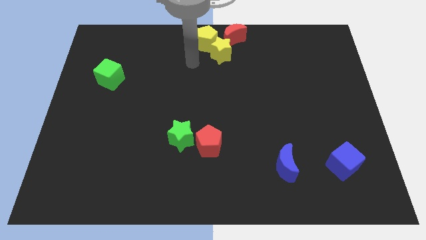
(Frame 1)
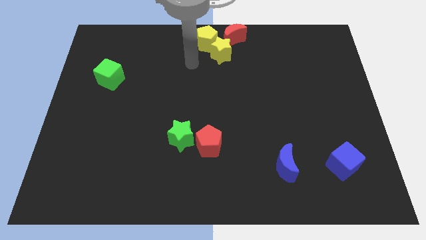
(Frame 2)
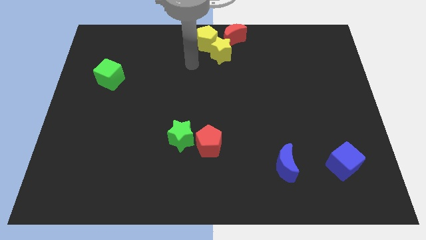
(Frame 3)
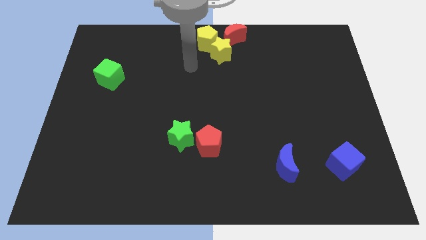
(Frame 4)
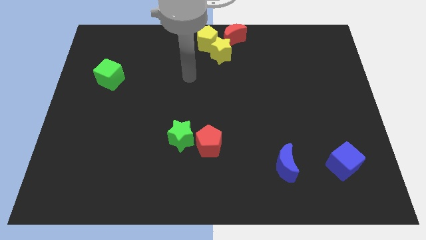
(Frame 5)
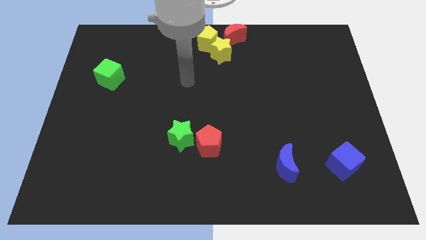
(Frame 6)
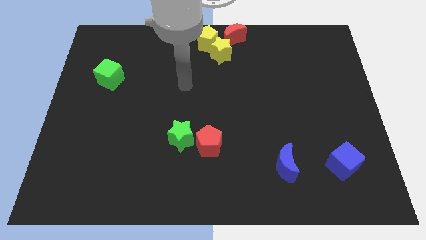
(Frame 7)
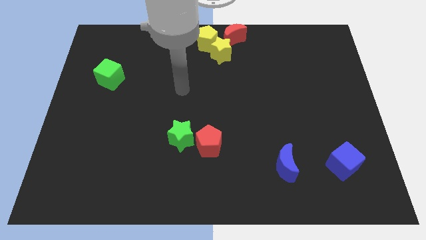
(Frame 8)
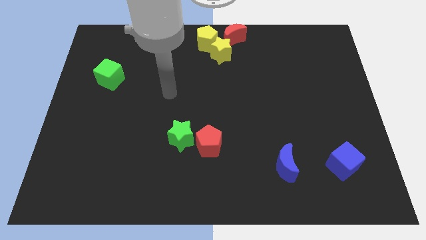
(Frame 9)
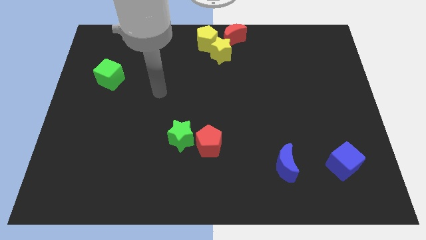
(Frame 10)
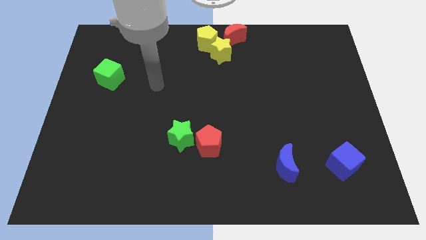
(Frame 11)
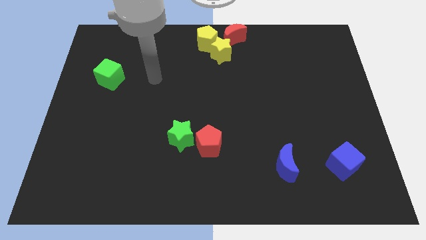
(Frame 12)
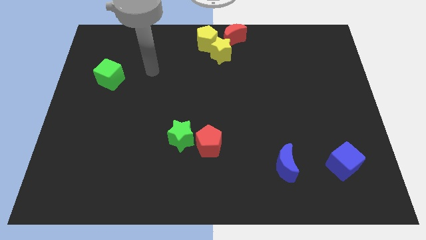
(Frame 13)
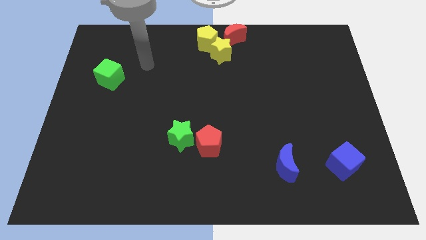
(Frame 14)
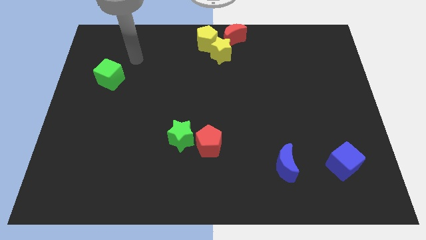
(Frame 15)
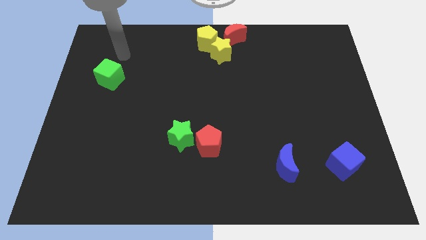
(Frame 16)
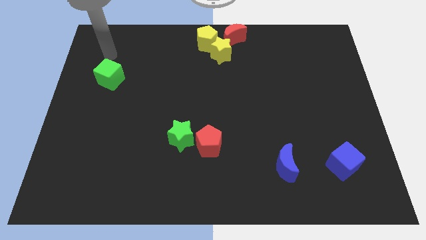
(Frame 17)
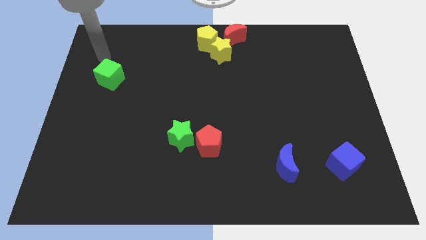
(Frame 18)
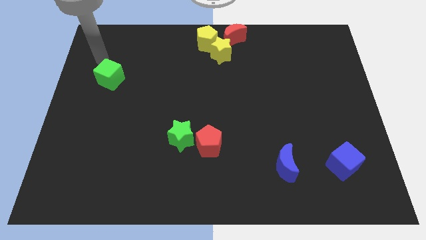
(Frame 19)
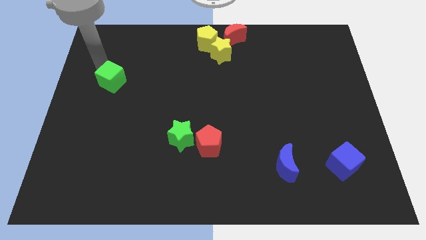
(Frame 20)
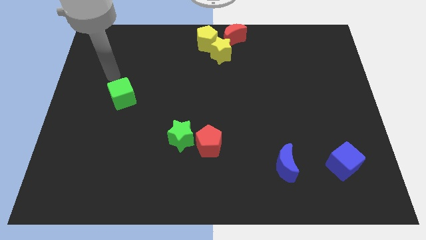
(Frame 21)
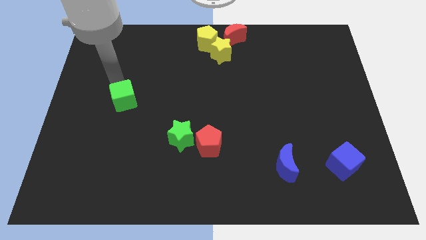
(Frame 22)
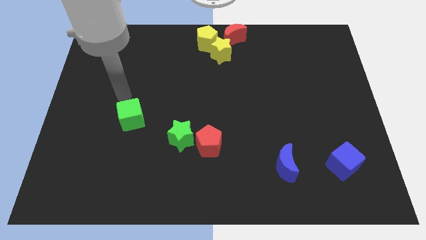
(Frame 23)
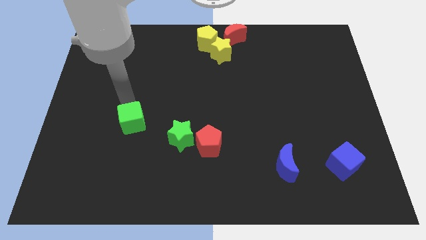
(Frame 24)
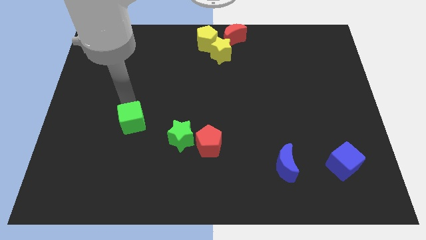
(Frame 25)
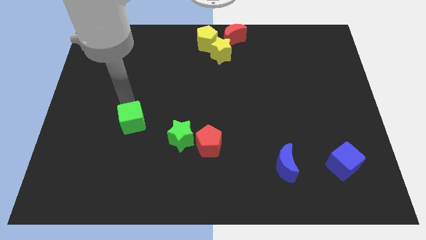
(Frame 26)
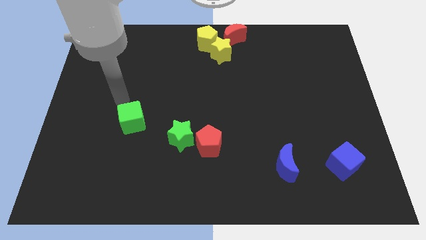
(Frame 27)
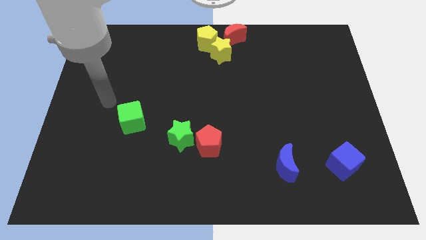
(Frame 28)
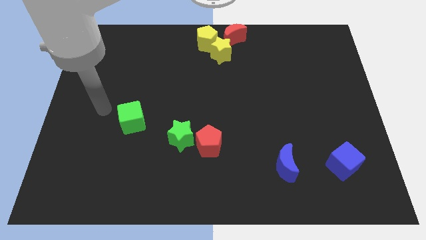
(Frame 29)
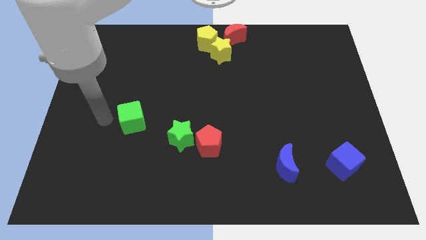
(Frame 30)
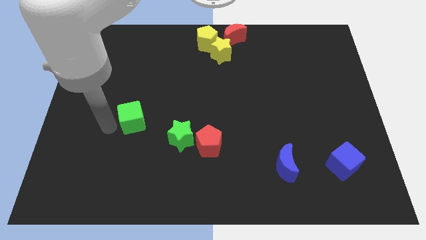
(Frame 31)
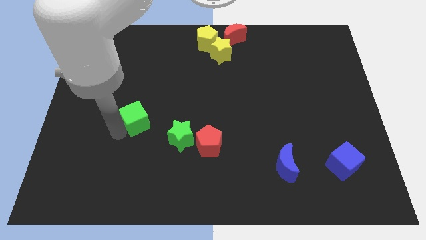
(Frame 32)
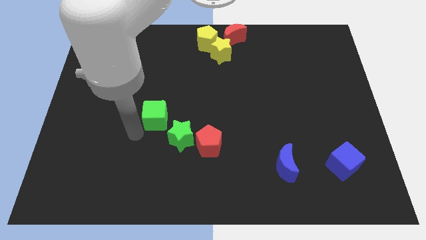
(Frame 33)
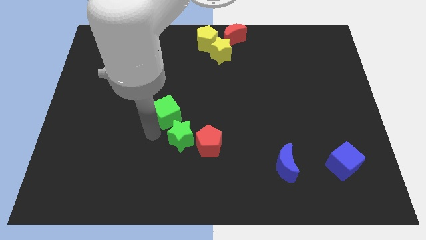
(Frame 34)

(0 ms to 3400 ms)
move the green cube close to the green star

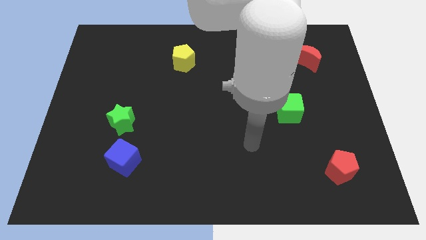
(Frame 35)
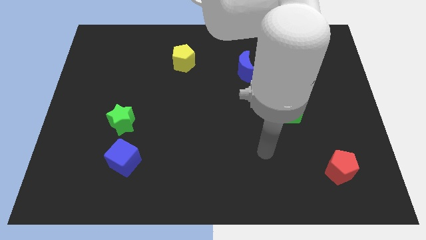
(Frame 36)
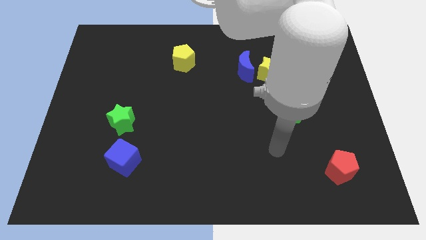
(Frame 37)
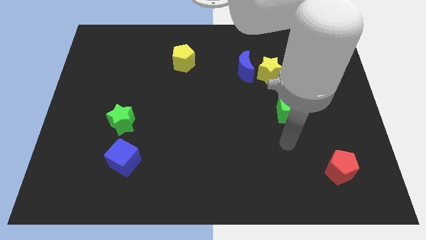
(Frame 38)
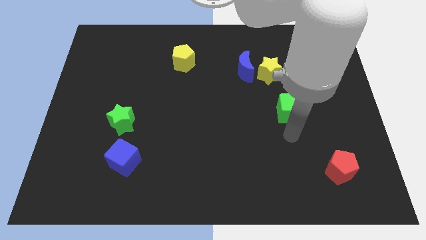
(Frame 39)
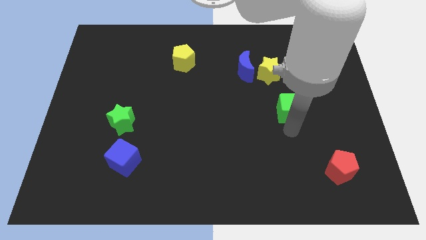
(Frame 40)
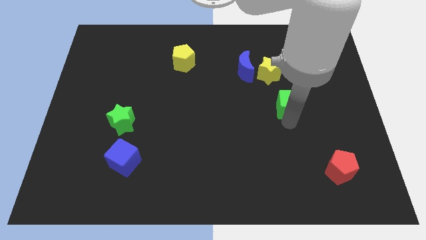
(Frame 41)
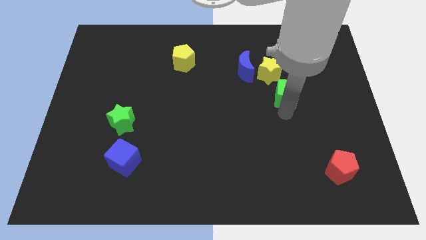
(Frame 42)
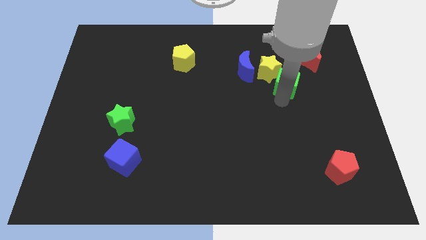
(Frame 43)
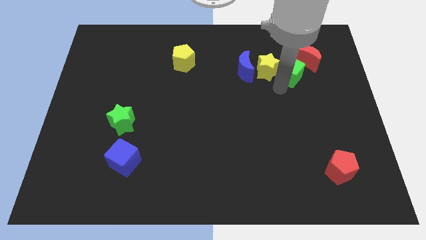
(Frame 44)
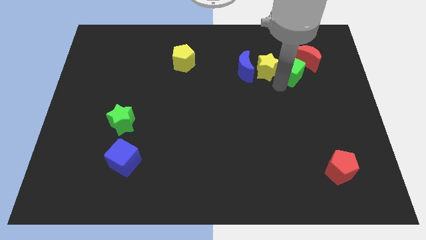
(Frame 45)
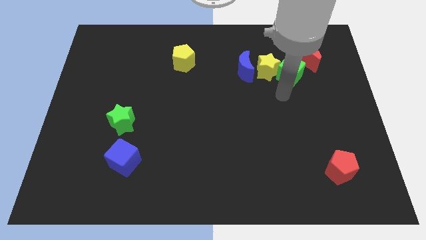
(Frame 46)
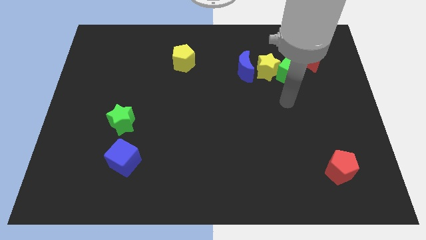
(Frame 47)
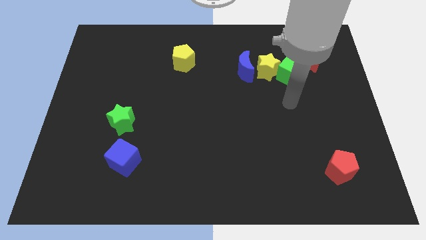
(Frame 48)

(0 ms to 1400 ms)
place the green cube between the blocks

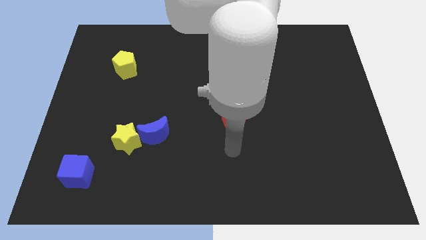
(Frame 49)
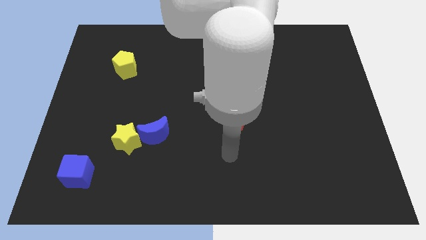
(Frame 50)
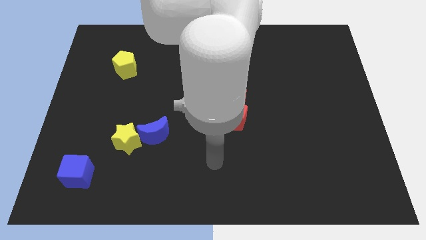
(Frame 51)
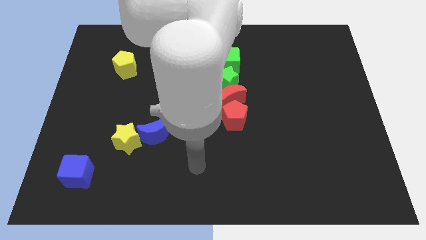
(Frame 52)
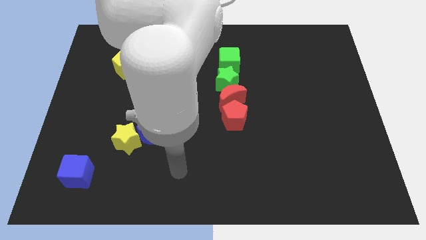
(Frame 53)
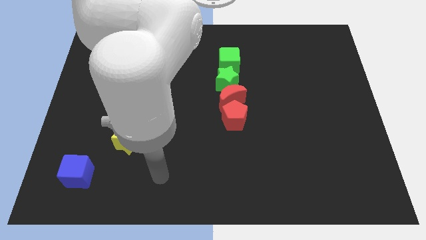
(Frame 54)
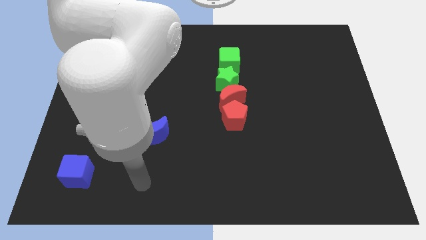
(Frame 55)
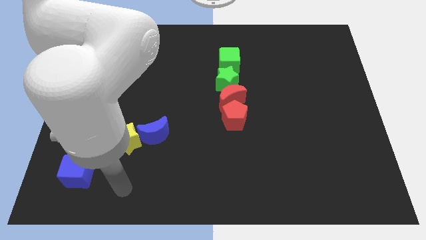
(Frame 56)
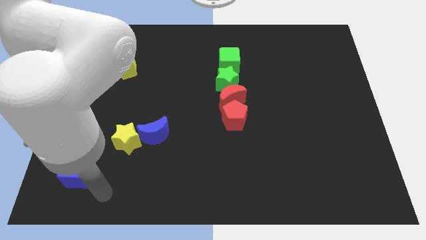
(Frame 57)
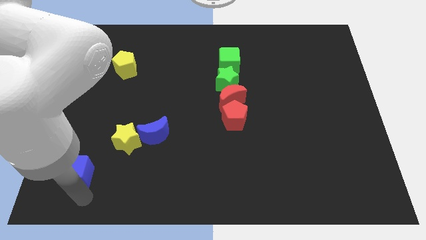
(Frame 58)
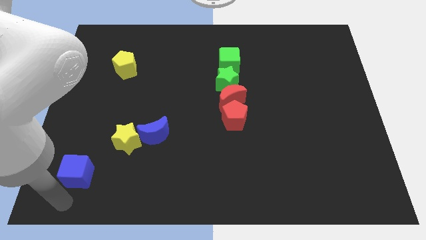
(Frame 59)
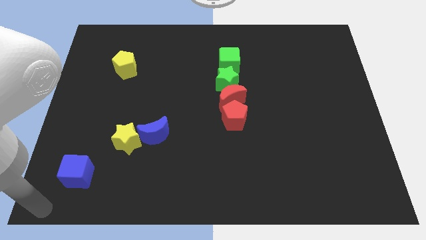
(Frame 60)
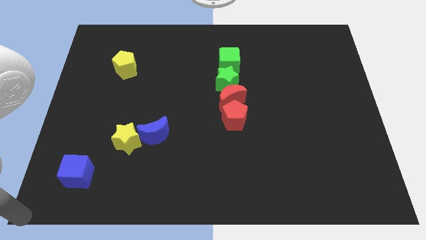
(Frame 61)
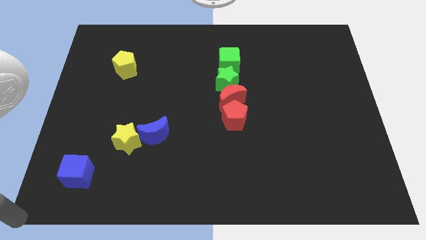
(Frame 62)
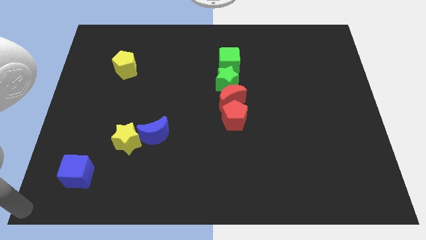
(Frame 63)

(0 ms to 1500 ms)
point your arm at the bottom left corner of the board

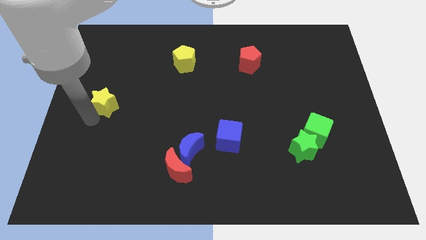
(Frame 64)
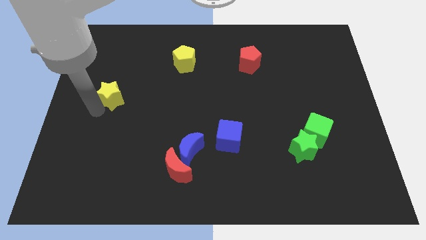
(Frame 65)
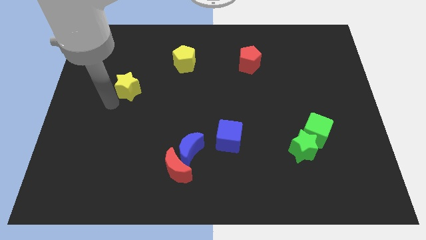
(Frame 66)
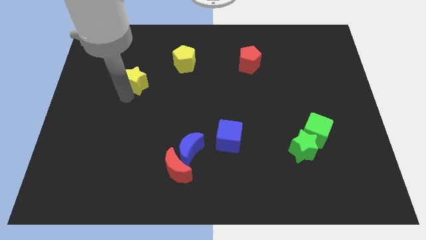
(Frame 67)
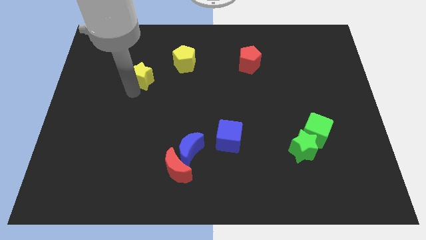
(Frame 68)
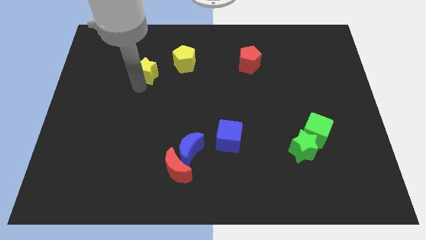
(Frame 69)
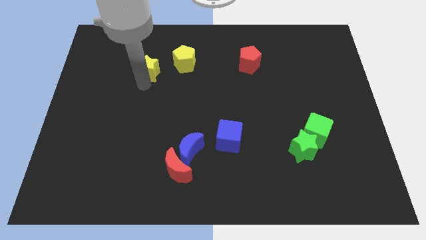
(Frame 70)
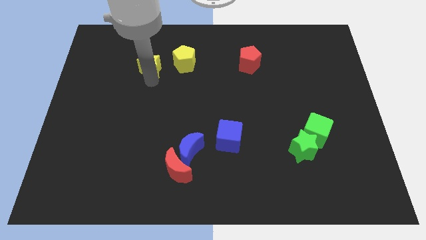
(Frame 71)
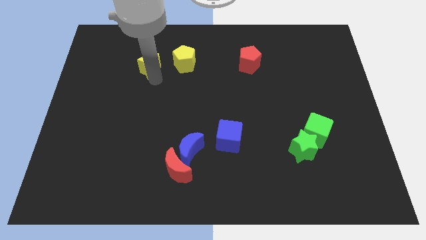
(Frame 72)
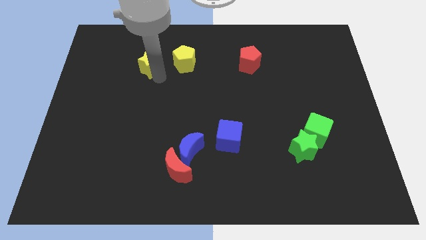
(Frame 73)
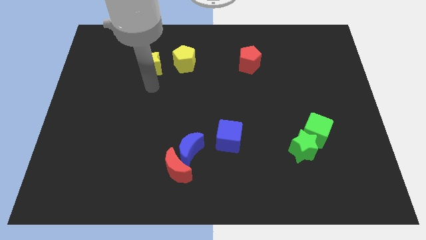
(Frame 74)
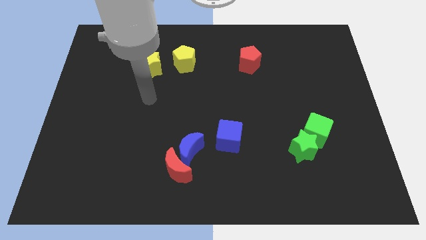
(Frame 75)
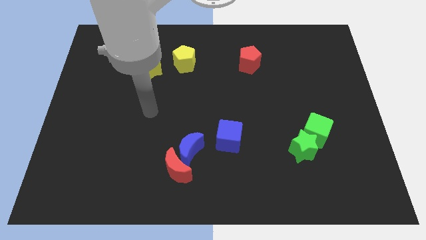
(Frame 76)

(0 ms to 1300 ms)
place the yellow star on the left side of the yellow pentagon

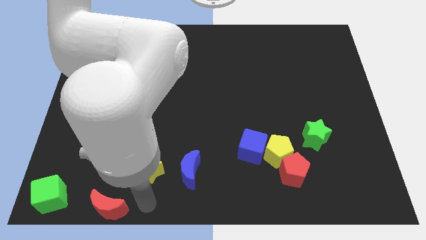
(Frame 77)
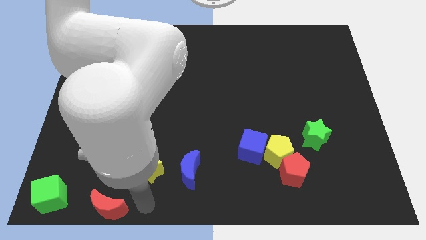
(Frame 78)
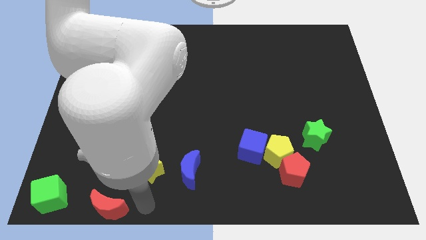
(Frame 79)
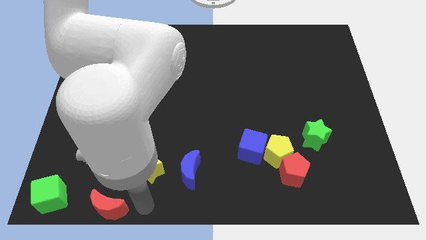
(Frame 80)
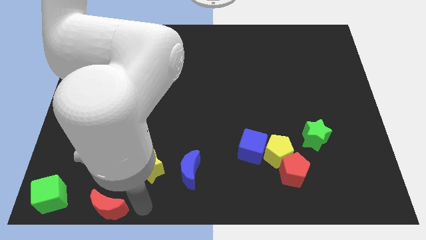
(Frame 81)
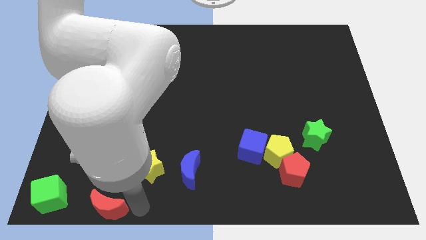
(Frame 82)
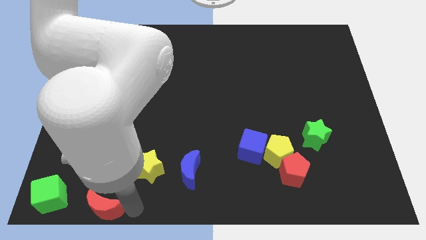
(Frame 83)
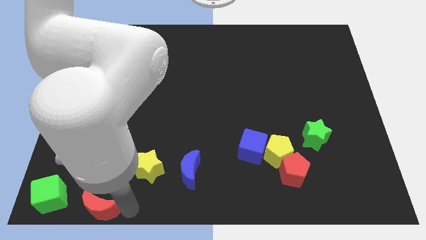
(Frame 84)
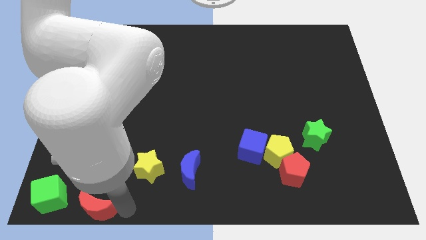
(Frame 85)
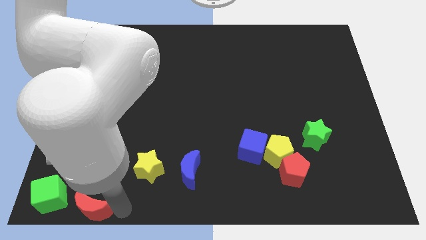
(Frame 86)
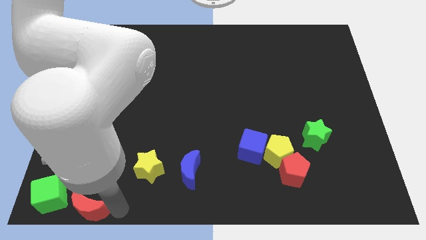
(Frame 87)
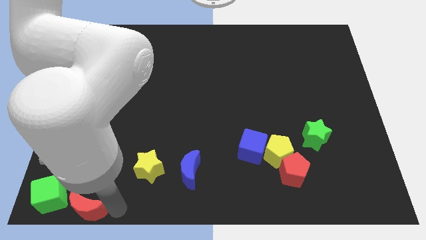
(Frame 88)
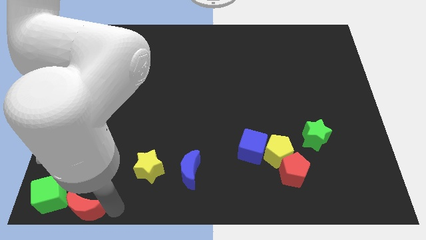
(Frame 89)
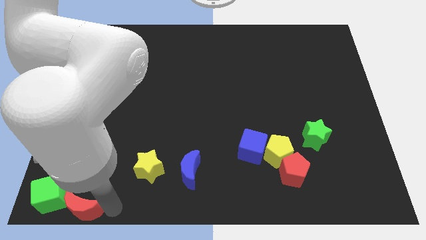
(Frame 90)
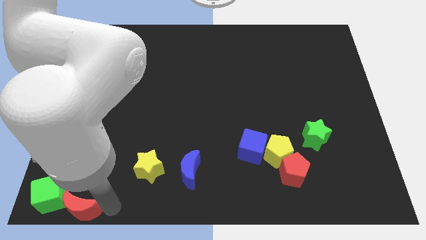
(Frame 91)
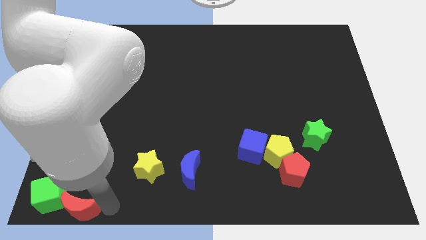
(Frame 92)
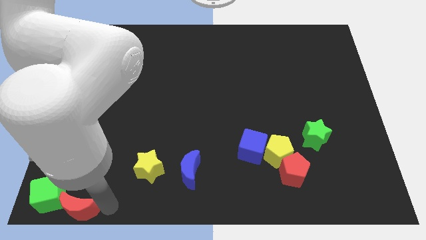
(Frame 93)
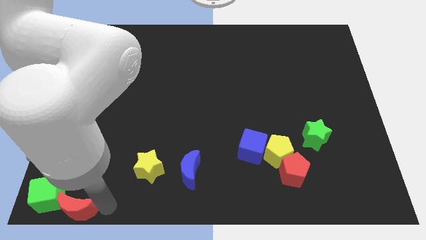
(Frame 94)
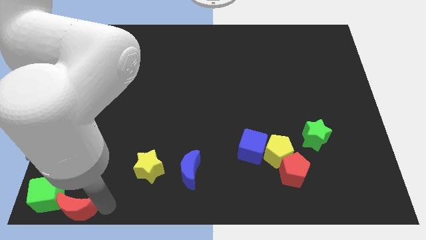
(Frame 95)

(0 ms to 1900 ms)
push the green cube with red crescent
